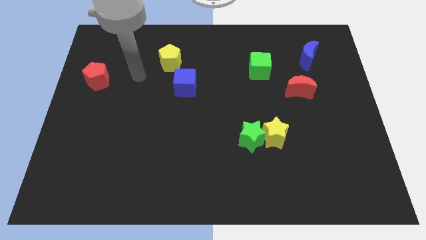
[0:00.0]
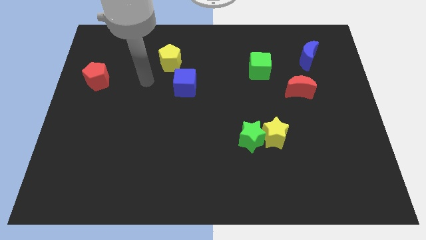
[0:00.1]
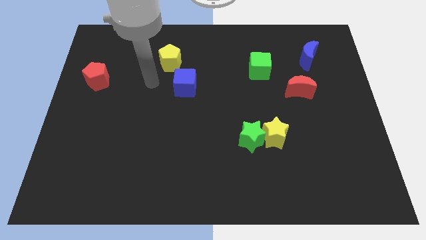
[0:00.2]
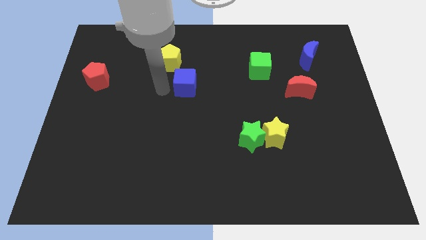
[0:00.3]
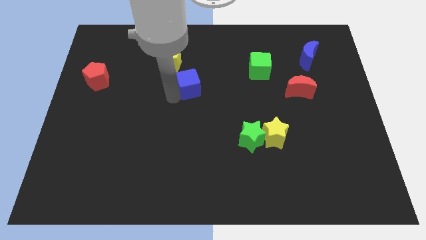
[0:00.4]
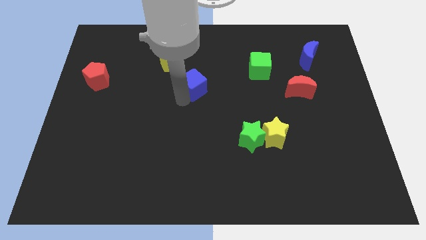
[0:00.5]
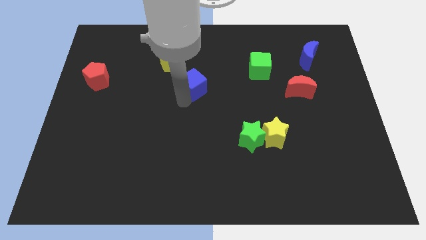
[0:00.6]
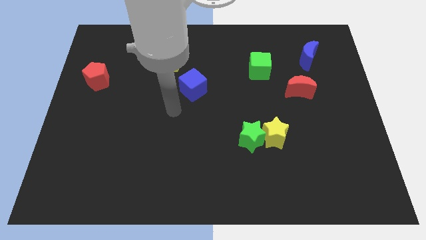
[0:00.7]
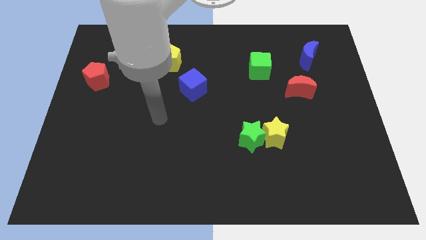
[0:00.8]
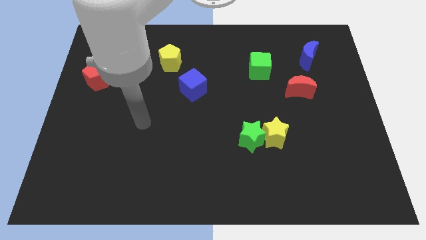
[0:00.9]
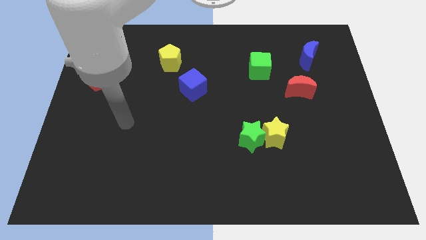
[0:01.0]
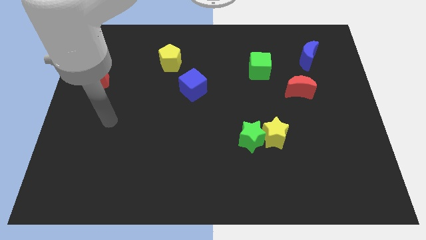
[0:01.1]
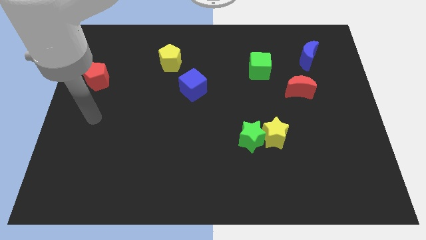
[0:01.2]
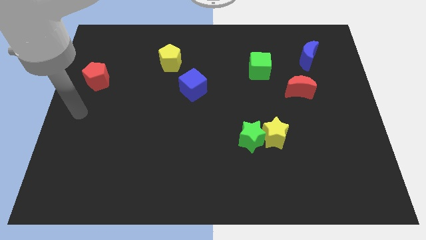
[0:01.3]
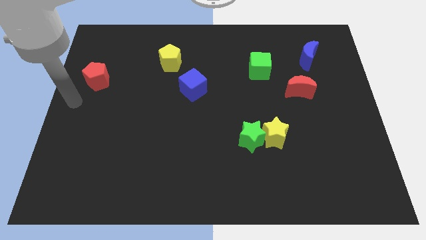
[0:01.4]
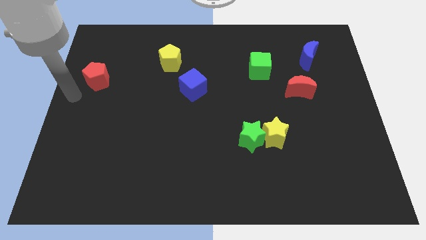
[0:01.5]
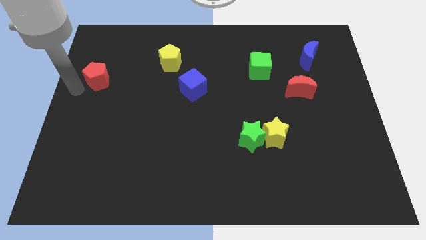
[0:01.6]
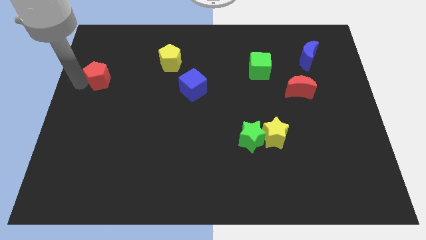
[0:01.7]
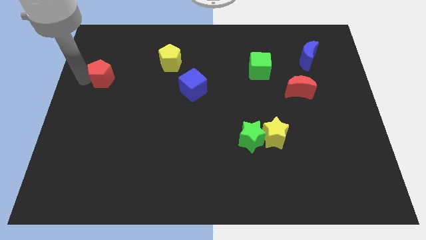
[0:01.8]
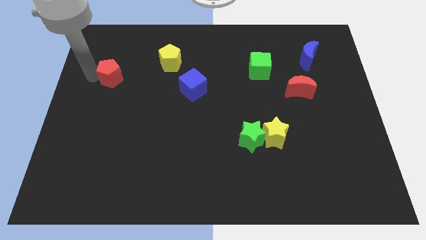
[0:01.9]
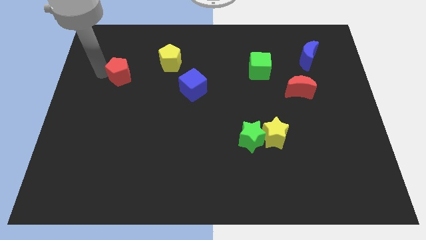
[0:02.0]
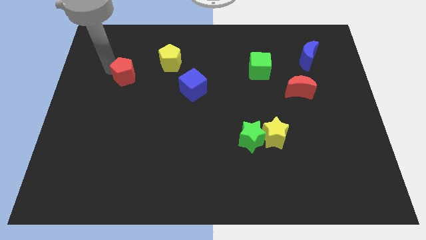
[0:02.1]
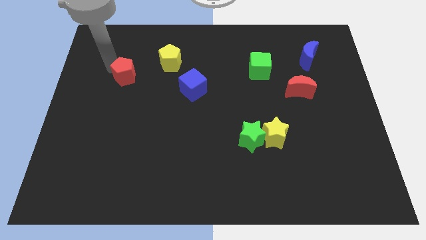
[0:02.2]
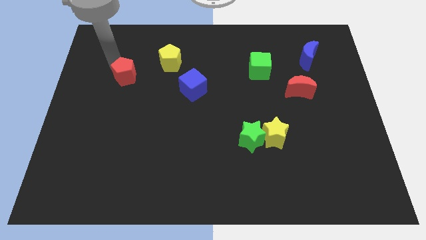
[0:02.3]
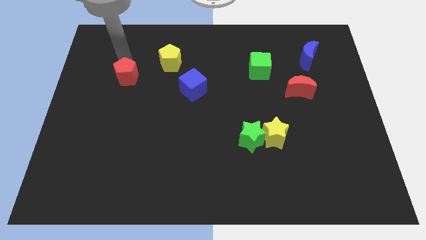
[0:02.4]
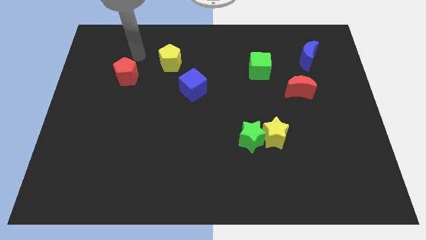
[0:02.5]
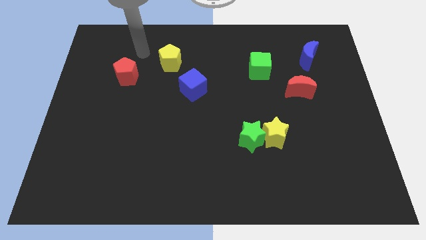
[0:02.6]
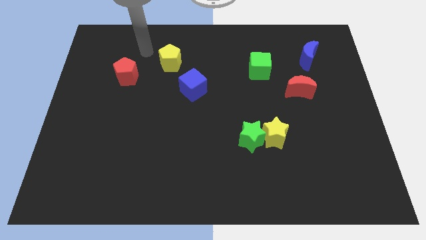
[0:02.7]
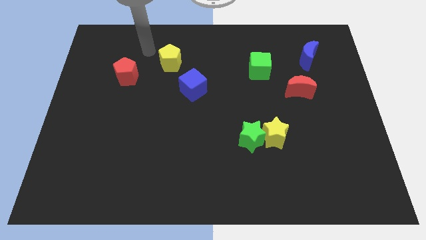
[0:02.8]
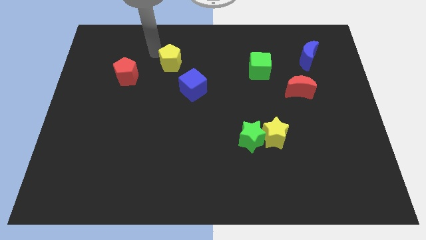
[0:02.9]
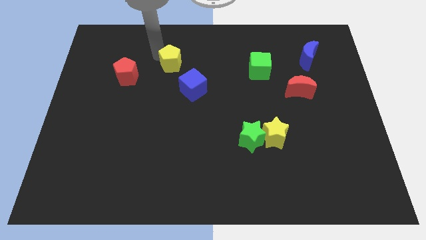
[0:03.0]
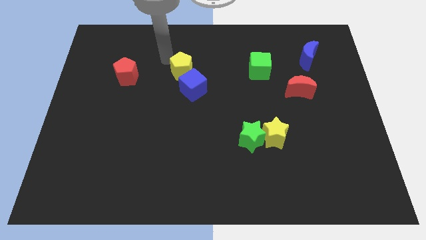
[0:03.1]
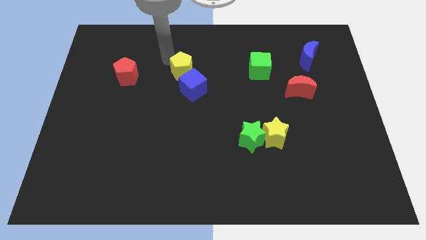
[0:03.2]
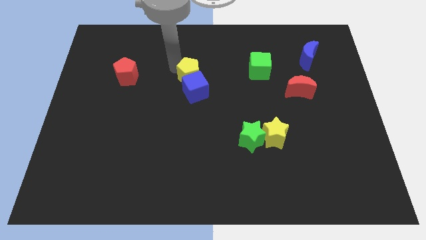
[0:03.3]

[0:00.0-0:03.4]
touch the blue cube red pentagon and yellow pentagon

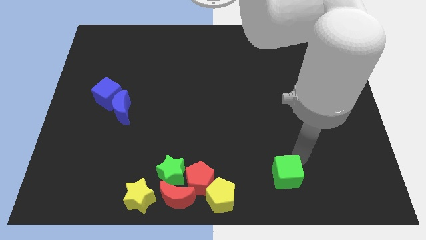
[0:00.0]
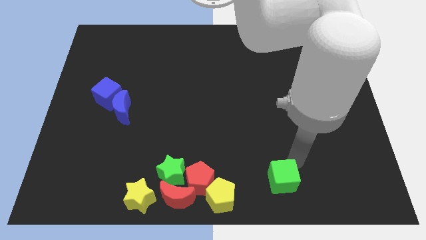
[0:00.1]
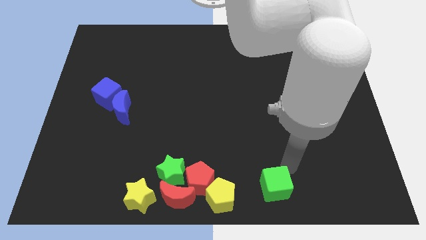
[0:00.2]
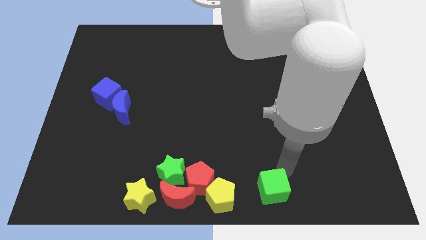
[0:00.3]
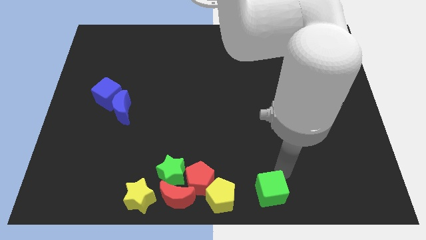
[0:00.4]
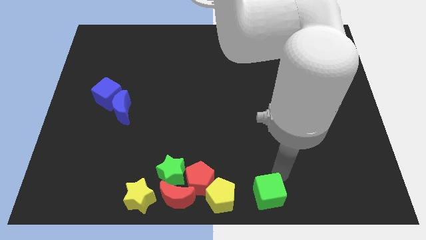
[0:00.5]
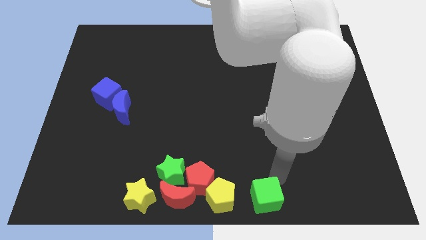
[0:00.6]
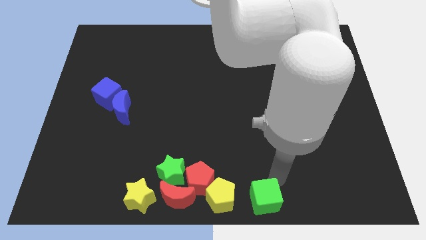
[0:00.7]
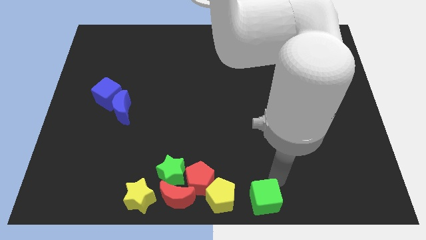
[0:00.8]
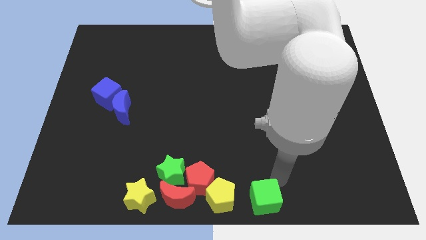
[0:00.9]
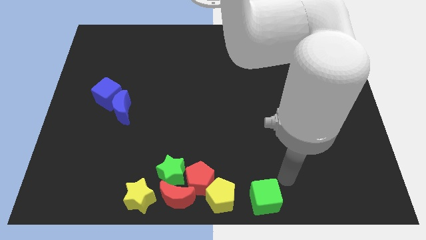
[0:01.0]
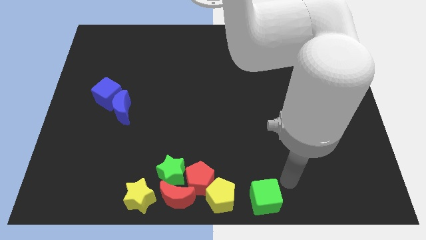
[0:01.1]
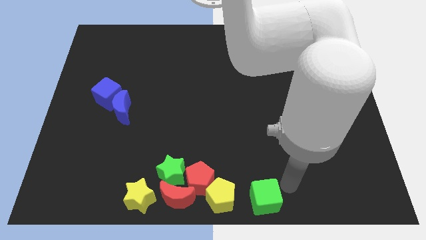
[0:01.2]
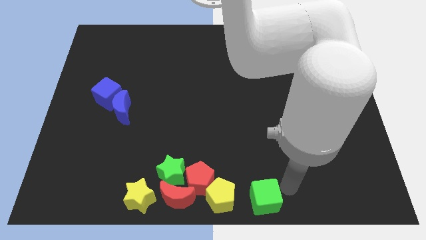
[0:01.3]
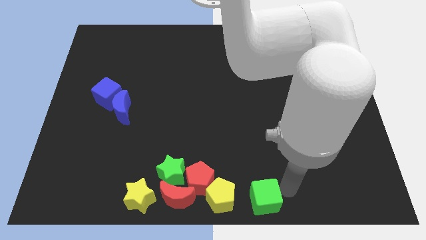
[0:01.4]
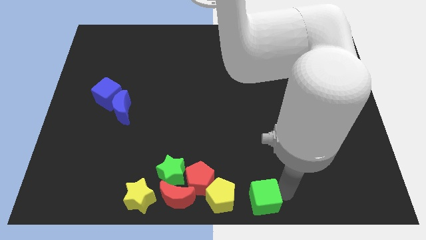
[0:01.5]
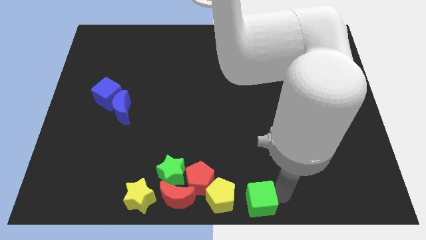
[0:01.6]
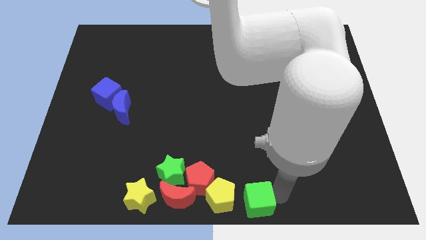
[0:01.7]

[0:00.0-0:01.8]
move the green cube to the right of the yellow pentagon

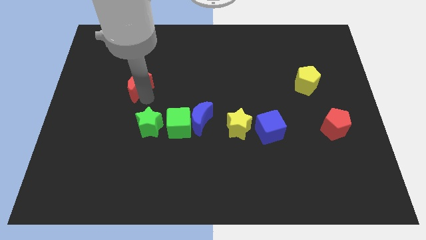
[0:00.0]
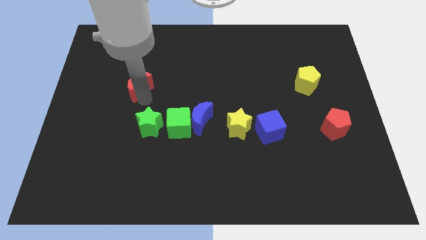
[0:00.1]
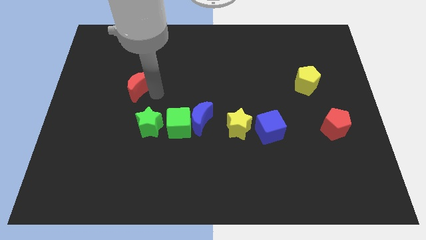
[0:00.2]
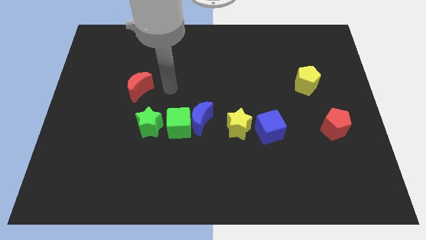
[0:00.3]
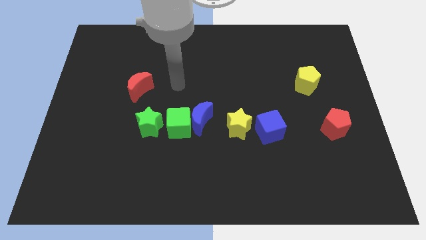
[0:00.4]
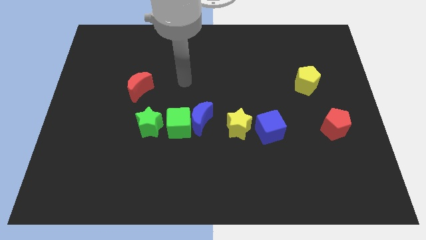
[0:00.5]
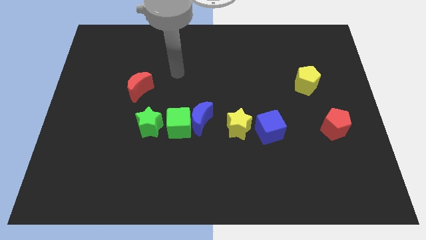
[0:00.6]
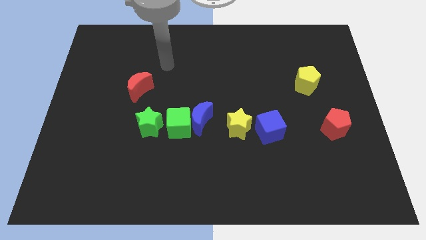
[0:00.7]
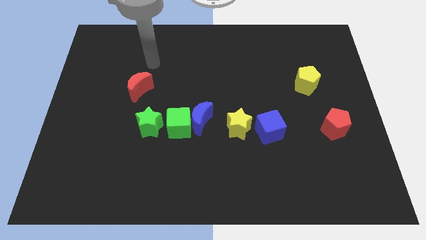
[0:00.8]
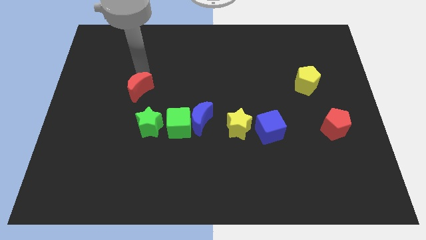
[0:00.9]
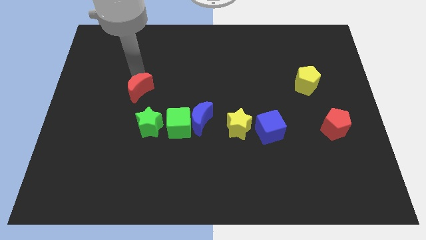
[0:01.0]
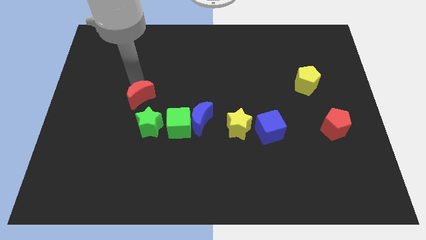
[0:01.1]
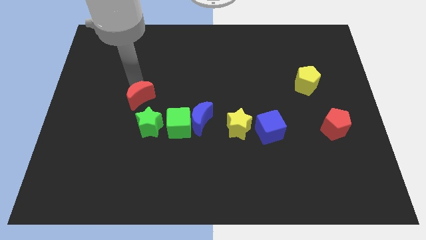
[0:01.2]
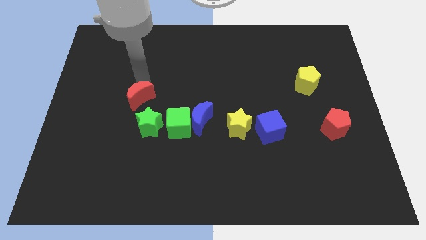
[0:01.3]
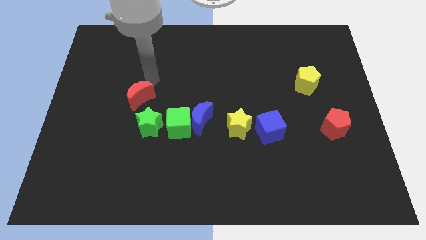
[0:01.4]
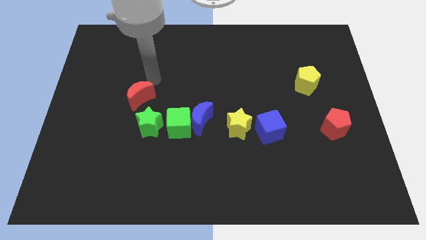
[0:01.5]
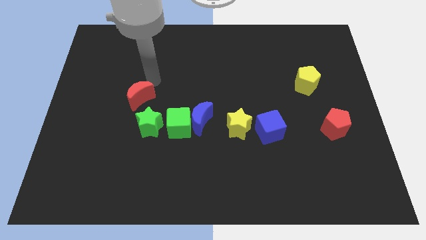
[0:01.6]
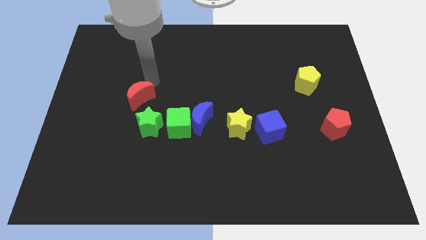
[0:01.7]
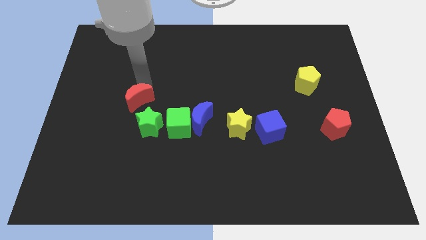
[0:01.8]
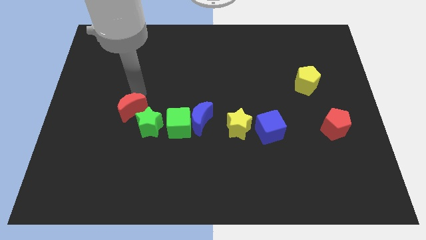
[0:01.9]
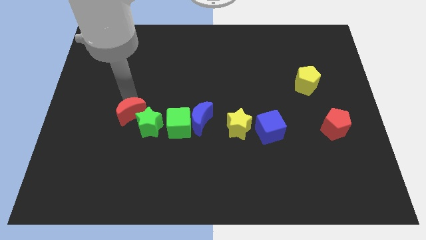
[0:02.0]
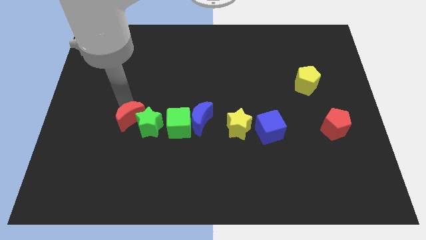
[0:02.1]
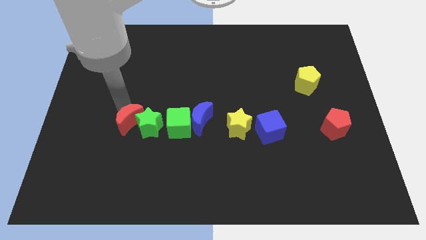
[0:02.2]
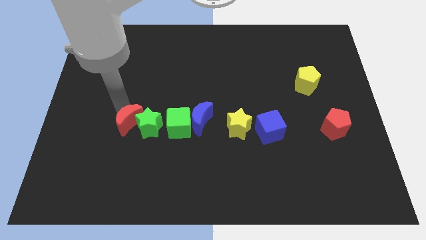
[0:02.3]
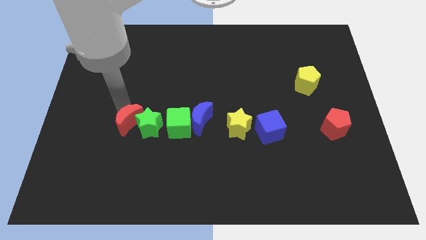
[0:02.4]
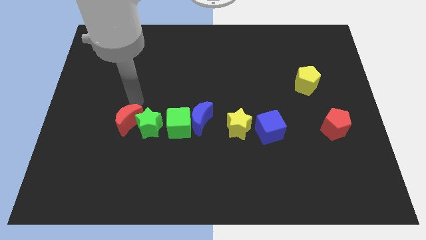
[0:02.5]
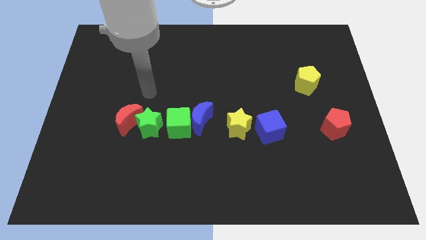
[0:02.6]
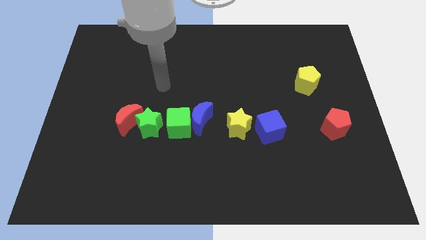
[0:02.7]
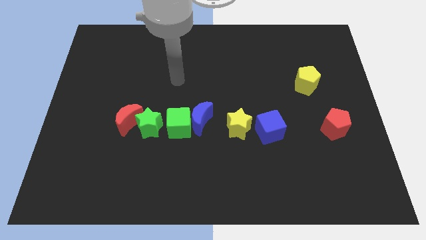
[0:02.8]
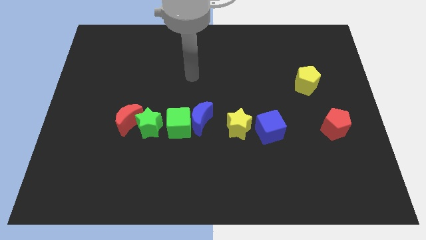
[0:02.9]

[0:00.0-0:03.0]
move red moon left of the green star

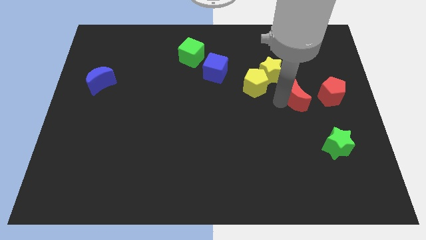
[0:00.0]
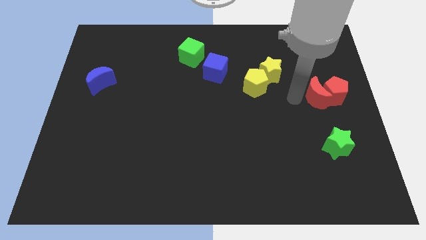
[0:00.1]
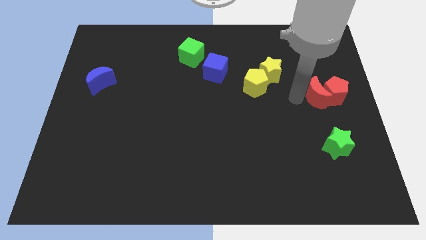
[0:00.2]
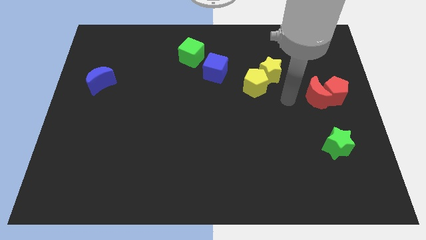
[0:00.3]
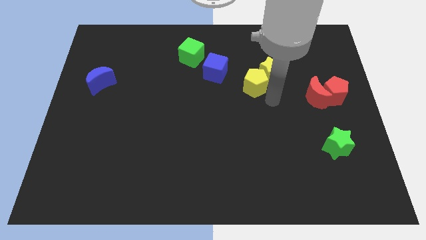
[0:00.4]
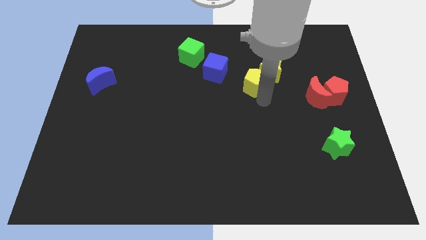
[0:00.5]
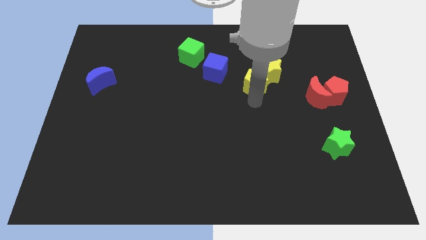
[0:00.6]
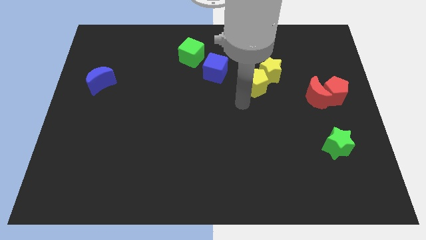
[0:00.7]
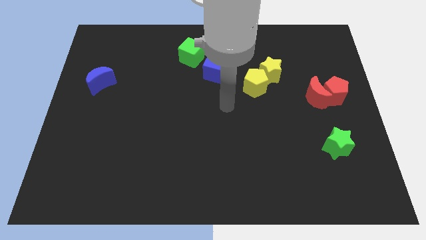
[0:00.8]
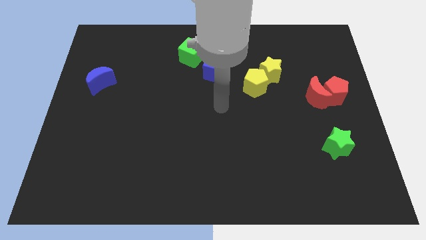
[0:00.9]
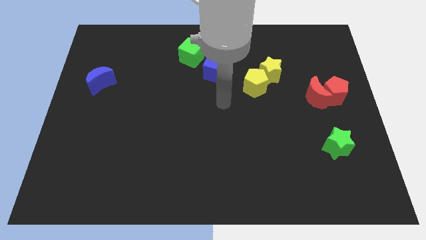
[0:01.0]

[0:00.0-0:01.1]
move the red moon to the red pentagon
